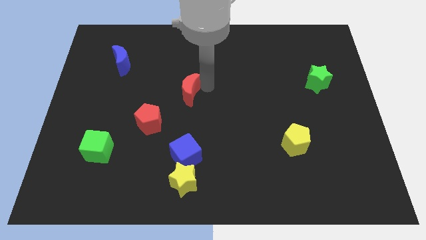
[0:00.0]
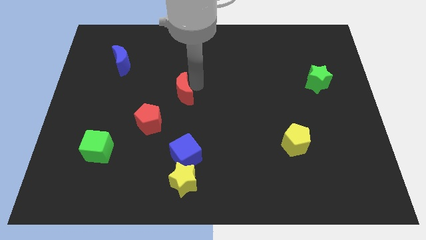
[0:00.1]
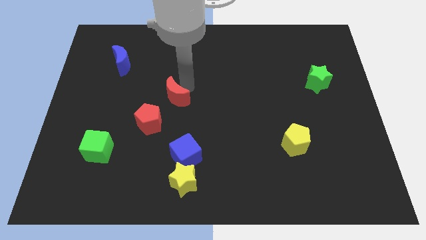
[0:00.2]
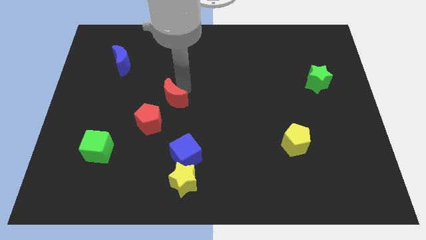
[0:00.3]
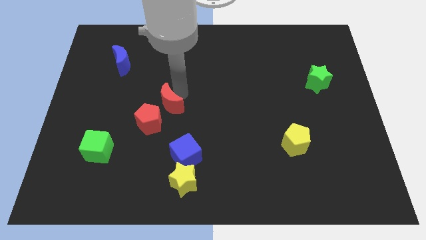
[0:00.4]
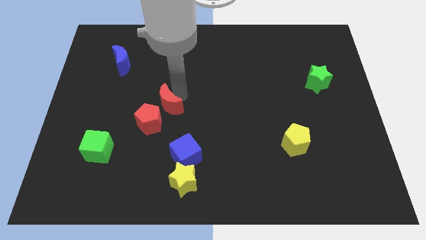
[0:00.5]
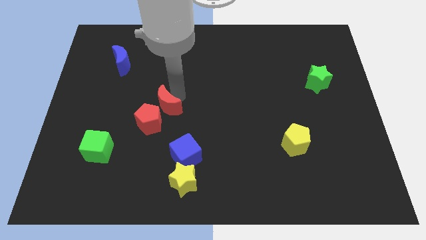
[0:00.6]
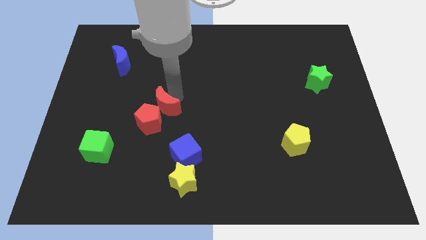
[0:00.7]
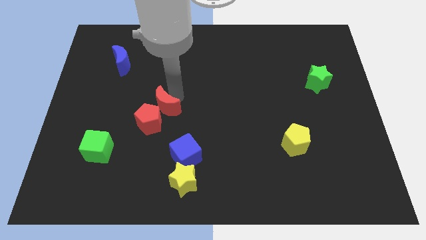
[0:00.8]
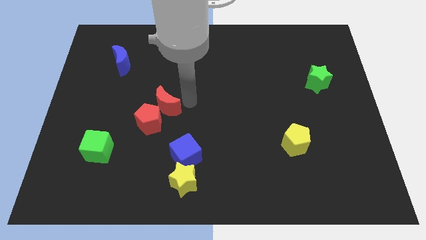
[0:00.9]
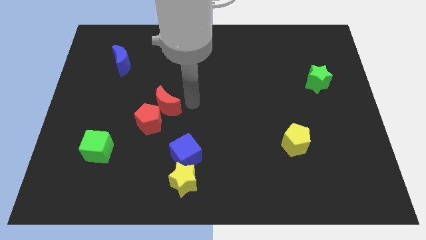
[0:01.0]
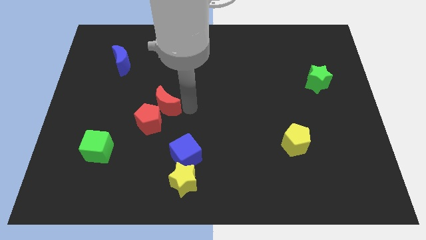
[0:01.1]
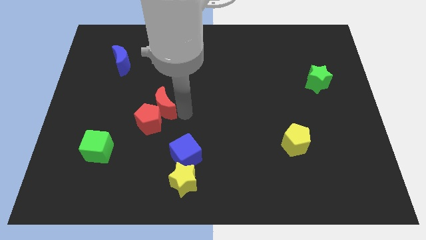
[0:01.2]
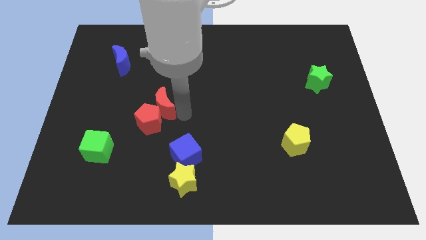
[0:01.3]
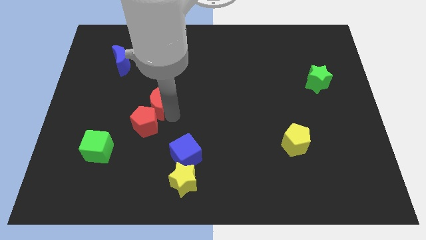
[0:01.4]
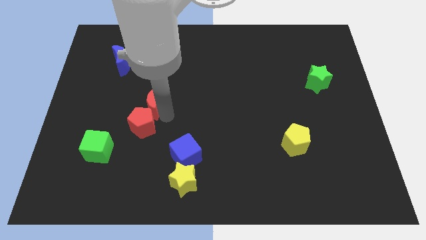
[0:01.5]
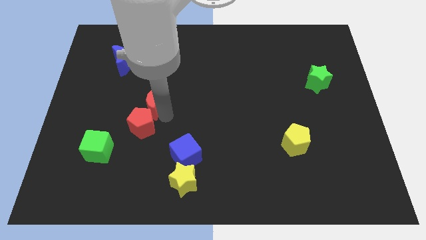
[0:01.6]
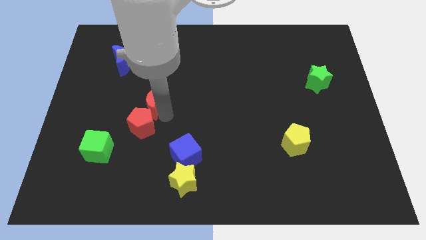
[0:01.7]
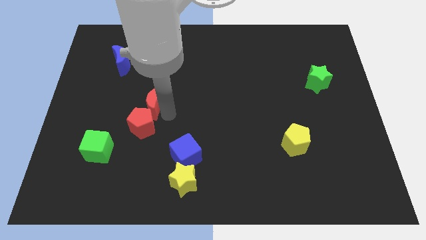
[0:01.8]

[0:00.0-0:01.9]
move the red crescent into the red pentagon

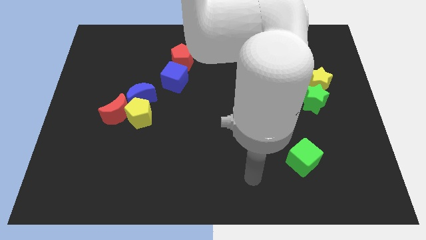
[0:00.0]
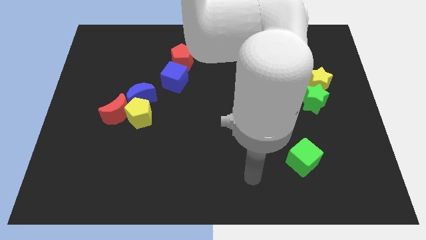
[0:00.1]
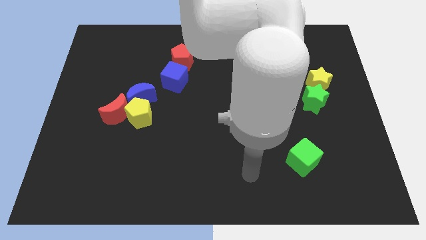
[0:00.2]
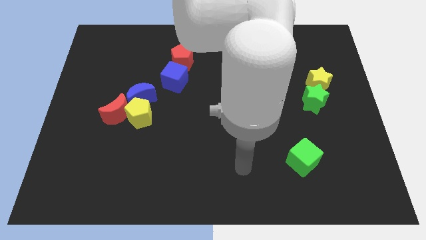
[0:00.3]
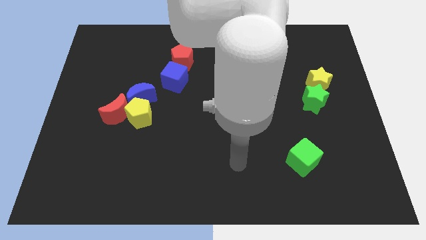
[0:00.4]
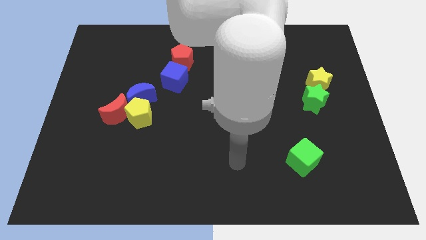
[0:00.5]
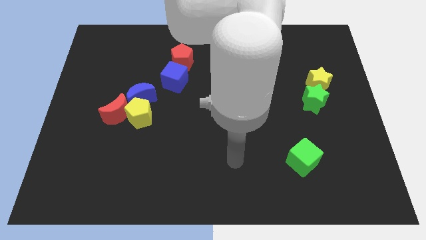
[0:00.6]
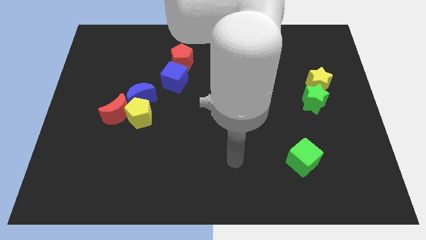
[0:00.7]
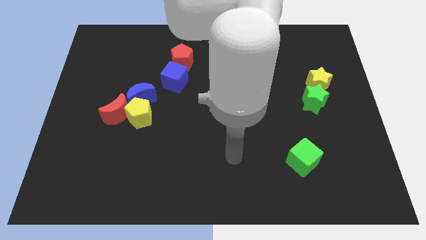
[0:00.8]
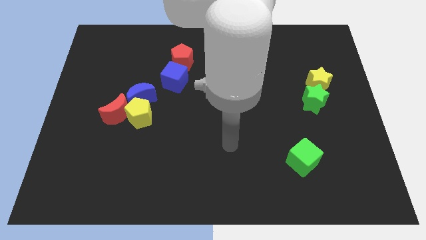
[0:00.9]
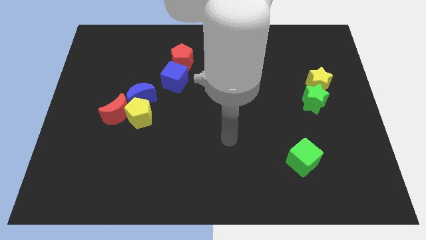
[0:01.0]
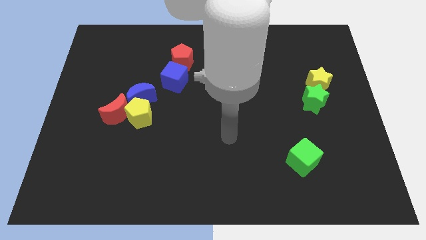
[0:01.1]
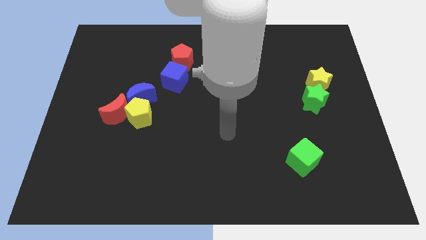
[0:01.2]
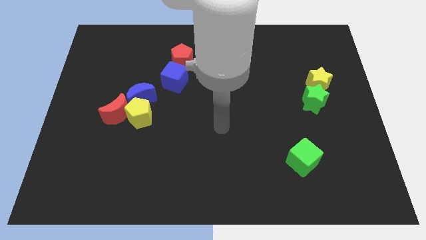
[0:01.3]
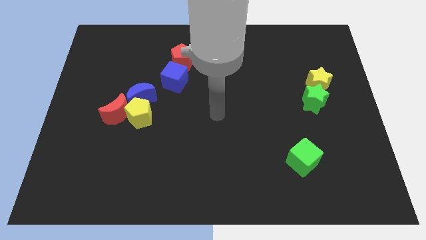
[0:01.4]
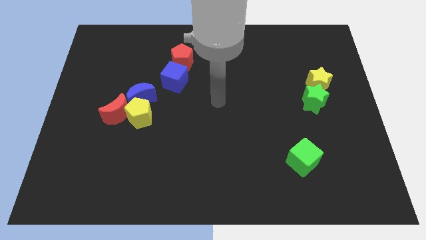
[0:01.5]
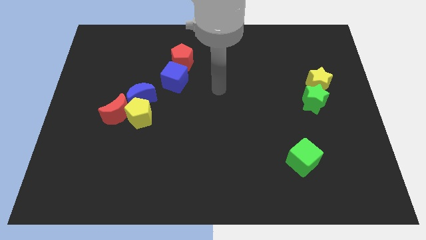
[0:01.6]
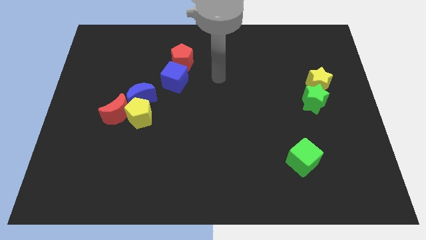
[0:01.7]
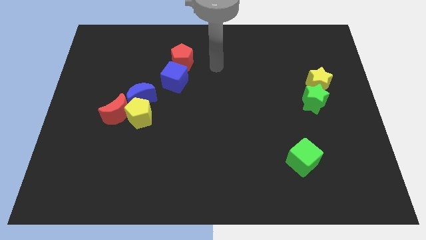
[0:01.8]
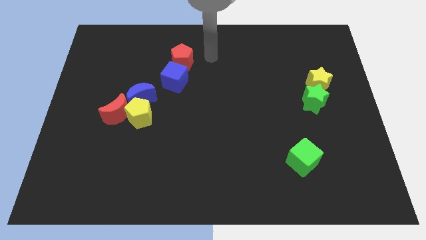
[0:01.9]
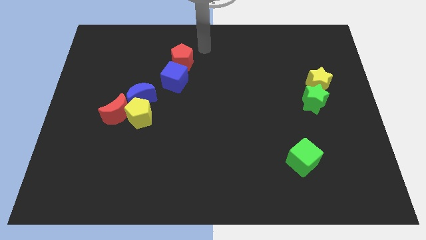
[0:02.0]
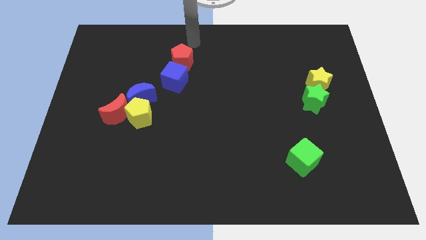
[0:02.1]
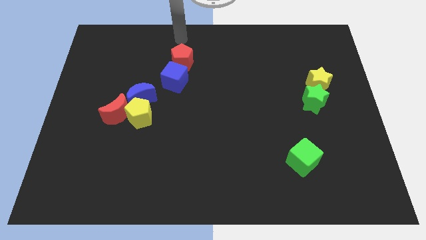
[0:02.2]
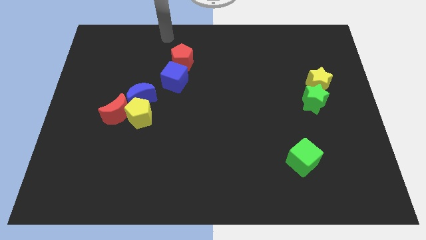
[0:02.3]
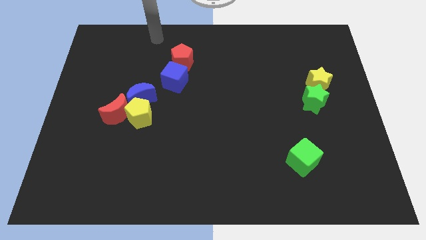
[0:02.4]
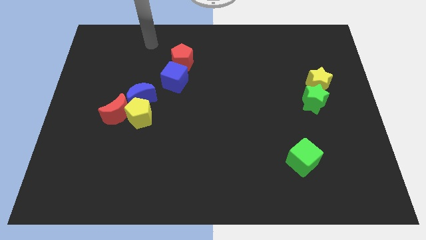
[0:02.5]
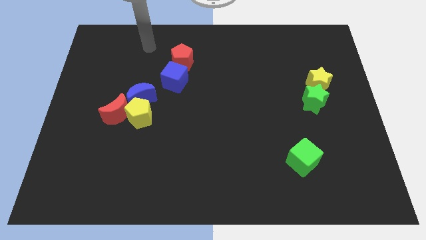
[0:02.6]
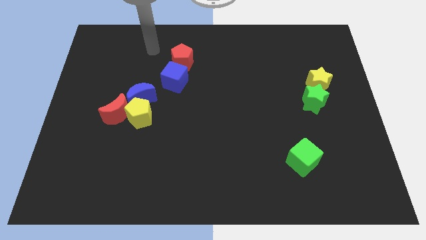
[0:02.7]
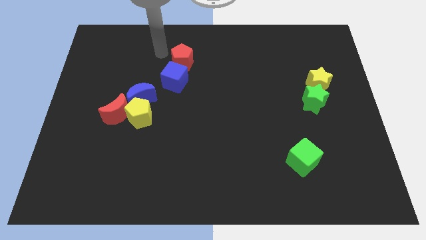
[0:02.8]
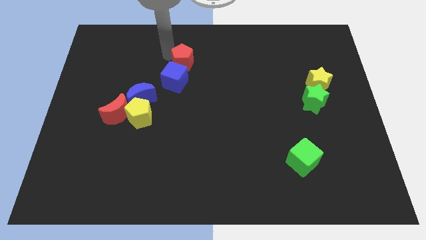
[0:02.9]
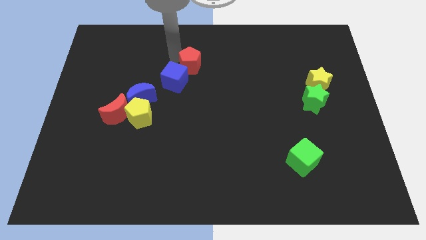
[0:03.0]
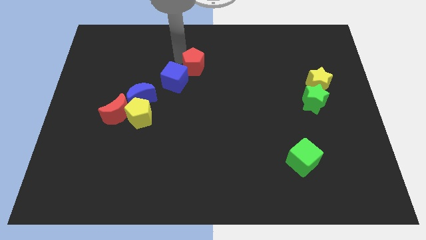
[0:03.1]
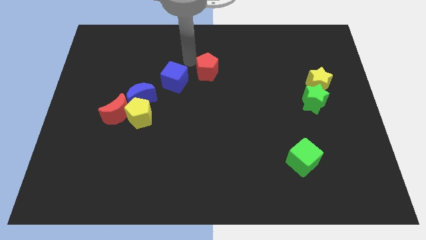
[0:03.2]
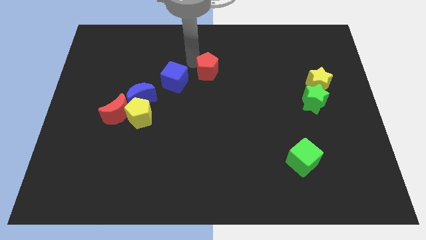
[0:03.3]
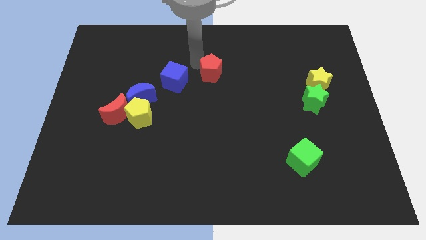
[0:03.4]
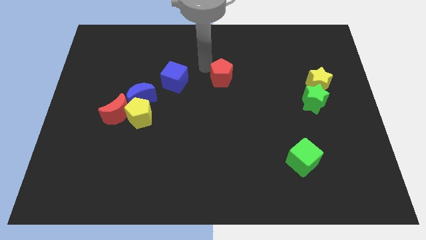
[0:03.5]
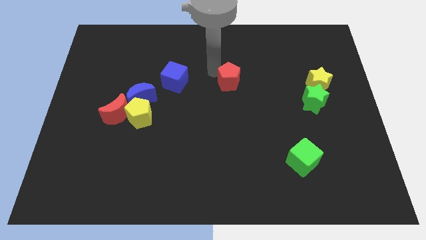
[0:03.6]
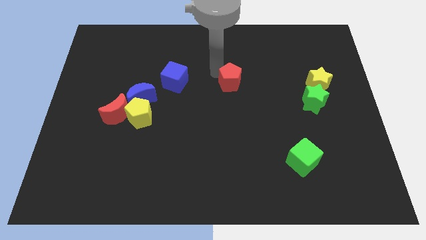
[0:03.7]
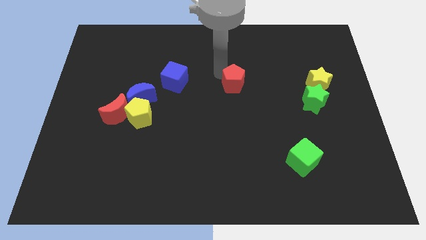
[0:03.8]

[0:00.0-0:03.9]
move the red pentagon to the right side of the blue cube

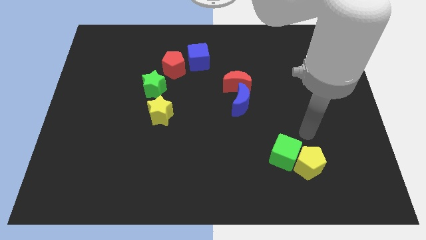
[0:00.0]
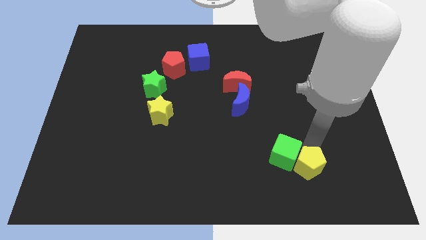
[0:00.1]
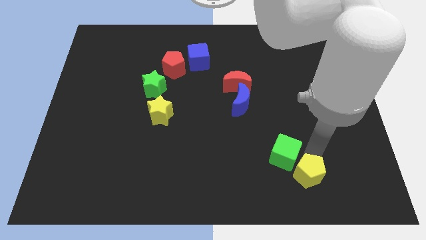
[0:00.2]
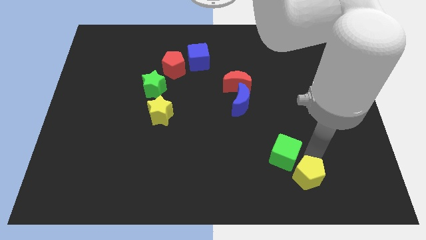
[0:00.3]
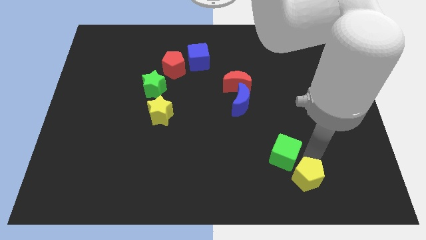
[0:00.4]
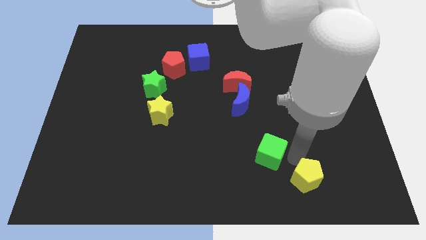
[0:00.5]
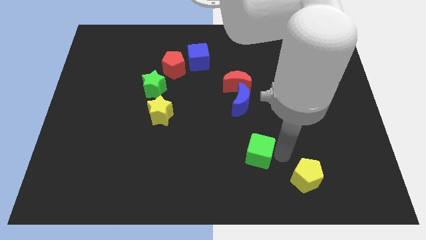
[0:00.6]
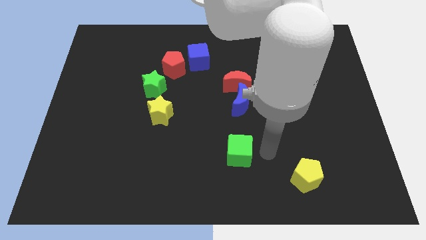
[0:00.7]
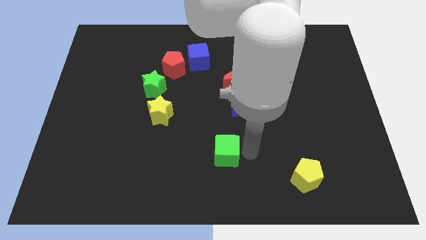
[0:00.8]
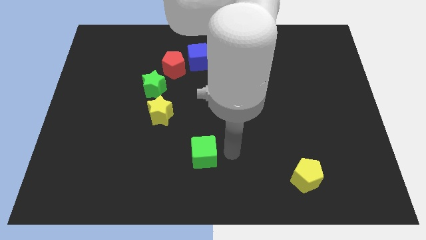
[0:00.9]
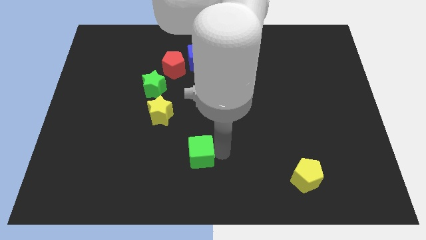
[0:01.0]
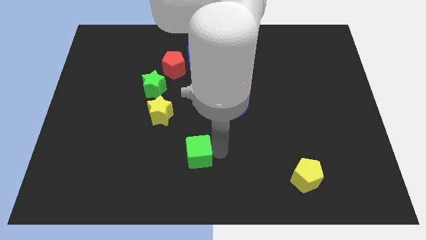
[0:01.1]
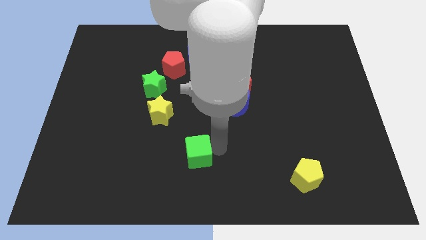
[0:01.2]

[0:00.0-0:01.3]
push the green cube to the left

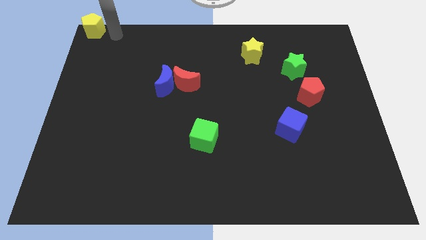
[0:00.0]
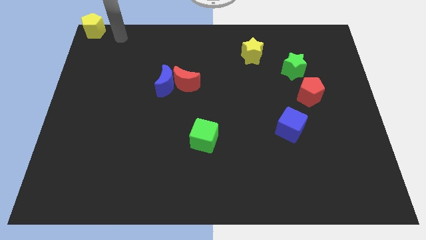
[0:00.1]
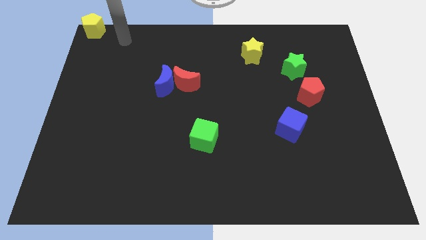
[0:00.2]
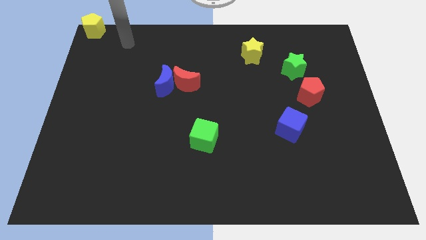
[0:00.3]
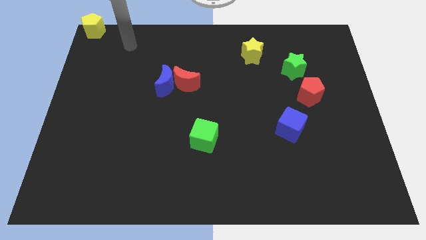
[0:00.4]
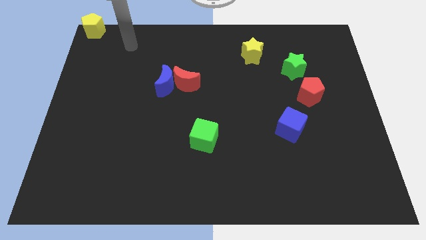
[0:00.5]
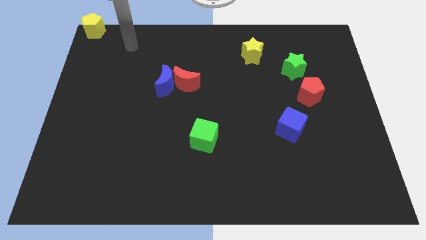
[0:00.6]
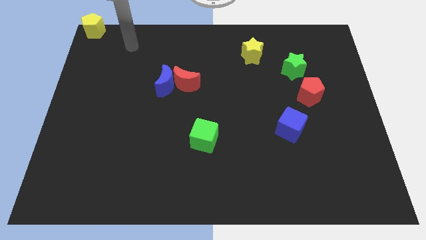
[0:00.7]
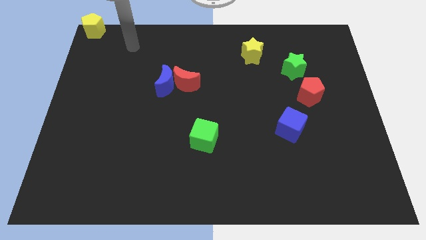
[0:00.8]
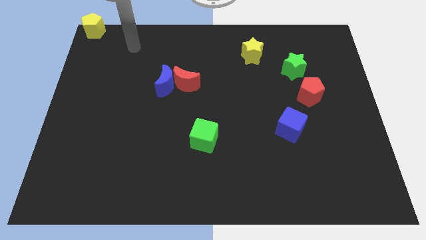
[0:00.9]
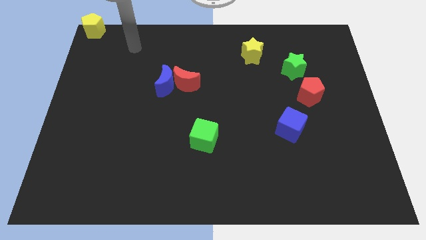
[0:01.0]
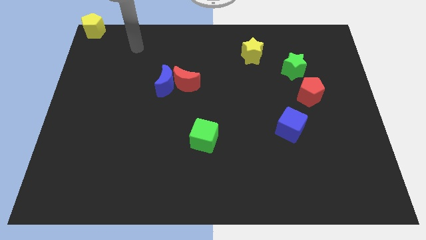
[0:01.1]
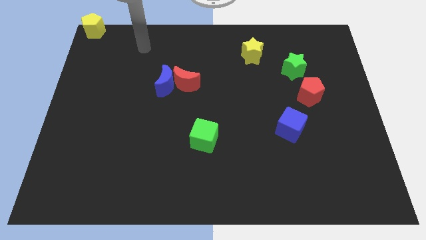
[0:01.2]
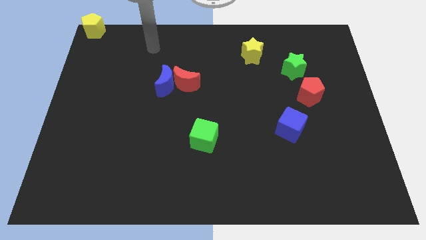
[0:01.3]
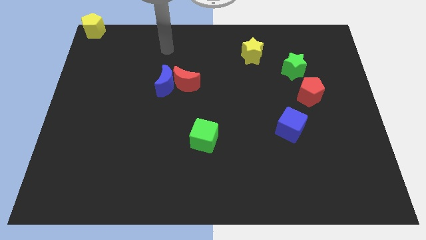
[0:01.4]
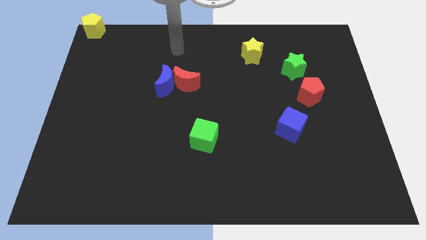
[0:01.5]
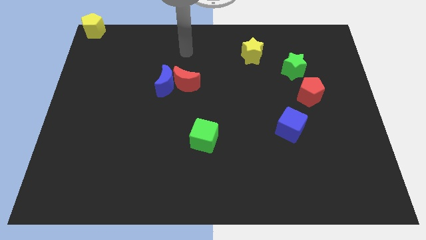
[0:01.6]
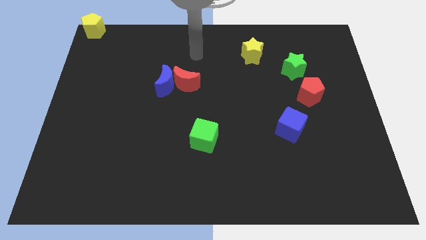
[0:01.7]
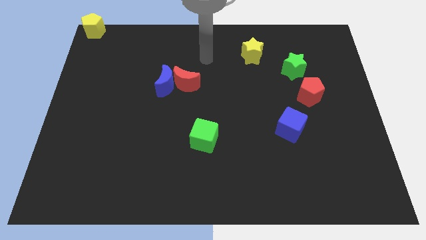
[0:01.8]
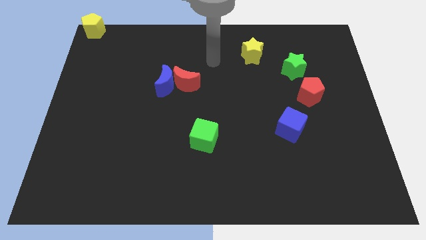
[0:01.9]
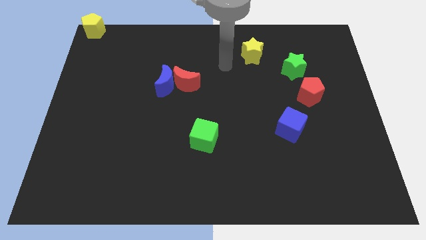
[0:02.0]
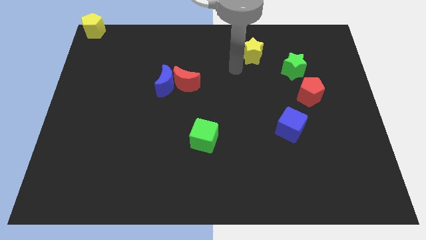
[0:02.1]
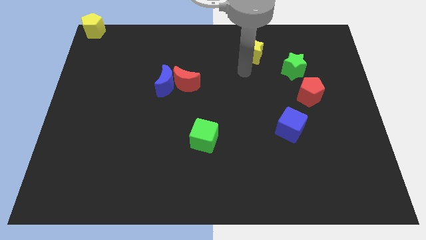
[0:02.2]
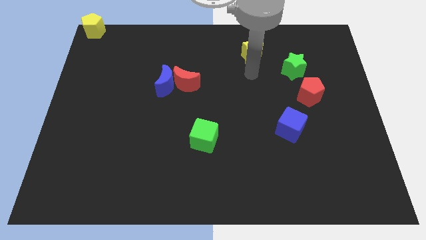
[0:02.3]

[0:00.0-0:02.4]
move the arm away from the yellow pentagon
